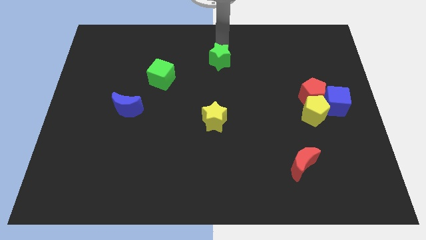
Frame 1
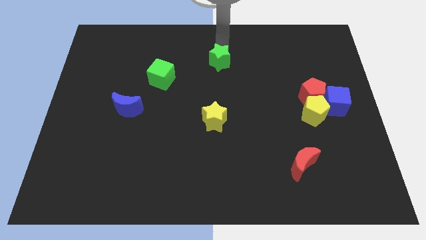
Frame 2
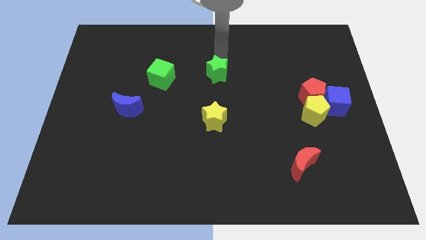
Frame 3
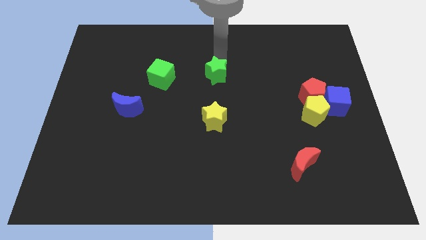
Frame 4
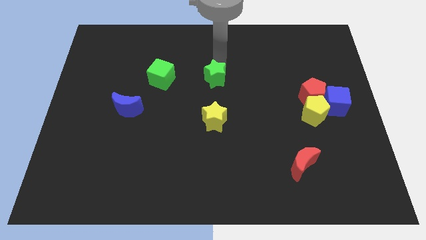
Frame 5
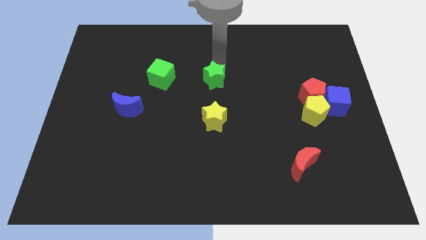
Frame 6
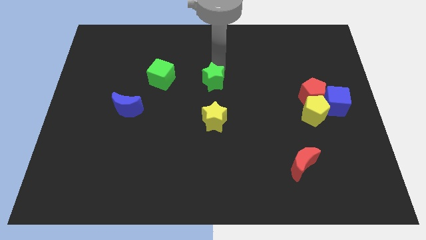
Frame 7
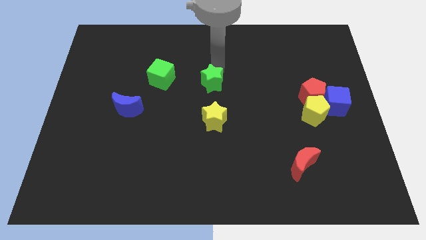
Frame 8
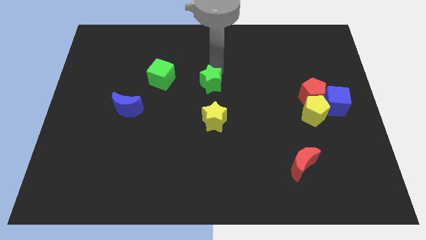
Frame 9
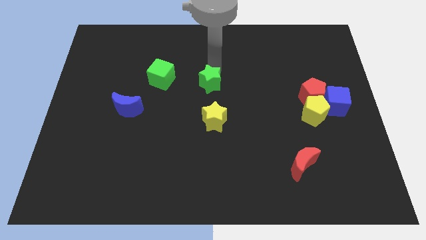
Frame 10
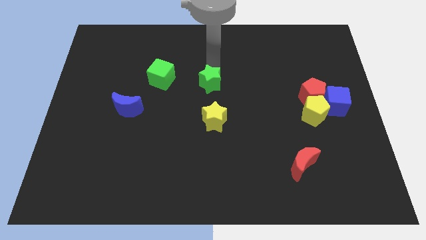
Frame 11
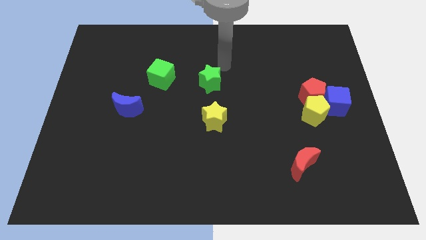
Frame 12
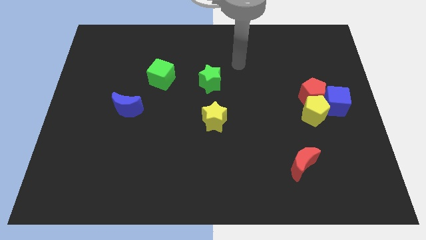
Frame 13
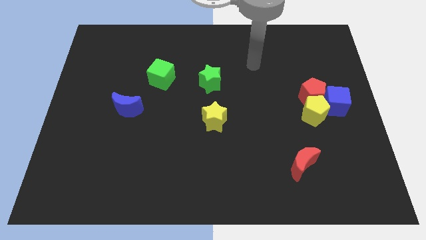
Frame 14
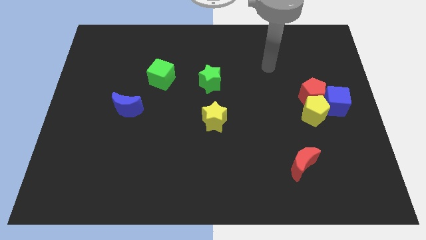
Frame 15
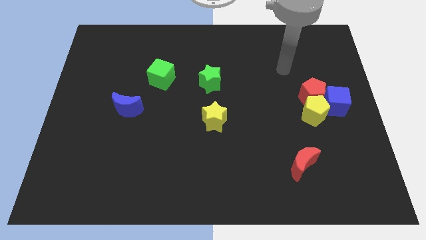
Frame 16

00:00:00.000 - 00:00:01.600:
move the green star downward

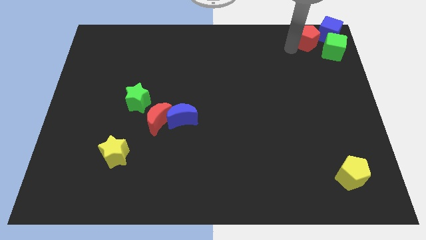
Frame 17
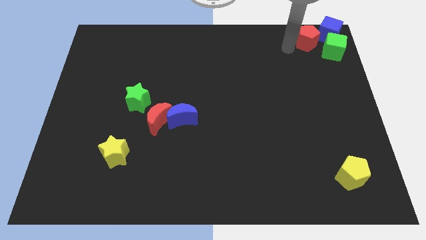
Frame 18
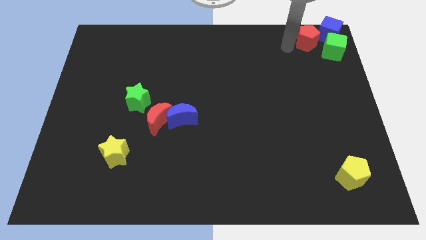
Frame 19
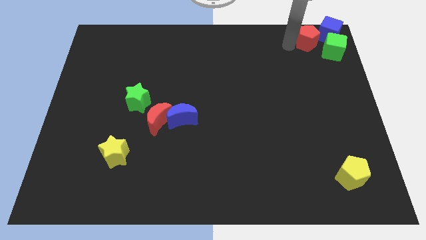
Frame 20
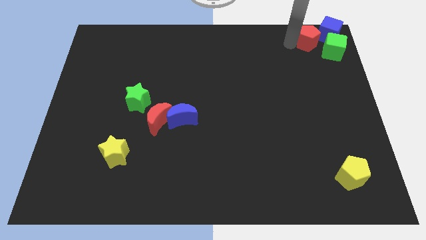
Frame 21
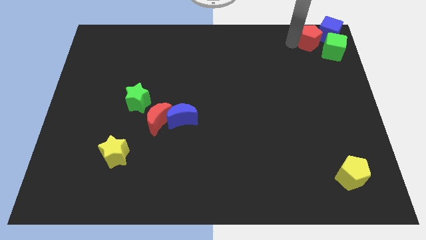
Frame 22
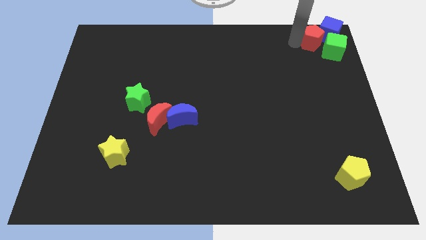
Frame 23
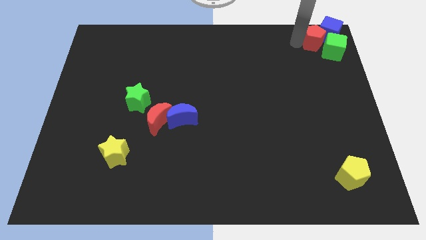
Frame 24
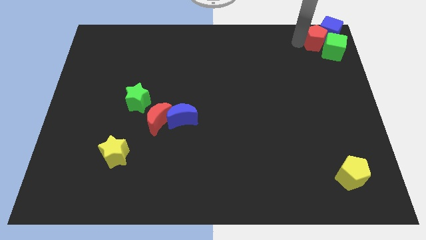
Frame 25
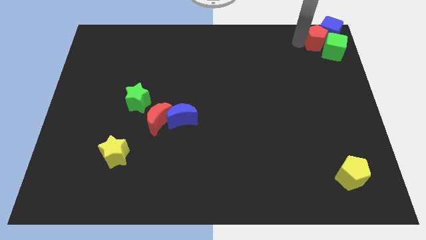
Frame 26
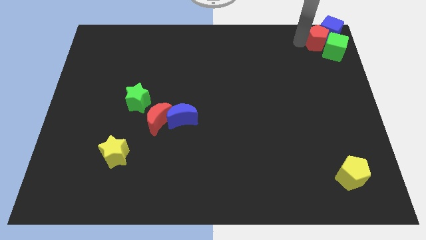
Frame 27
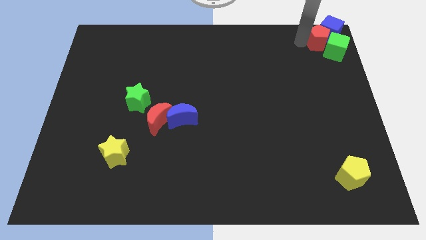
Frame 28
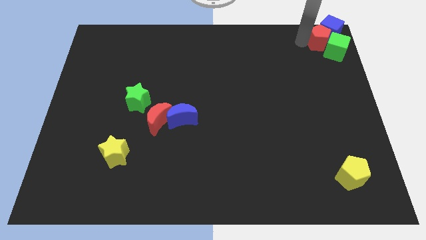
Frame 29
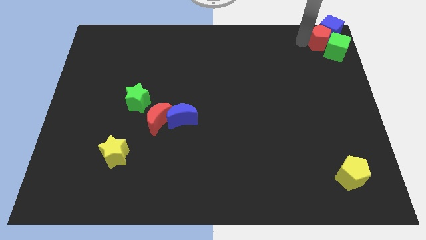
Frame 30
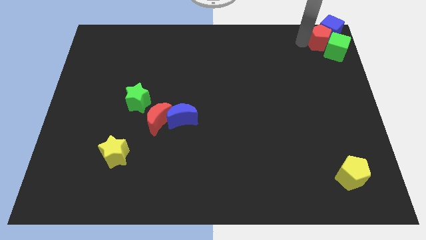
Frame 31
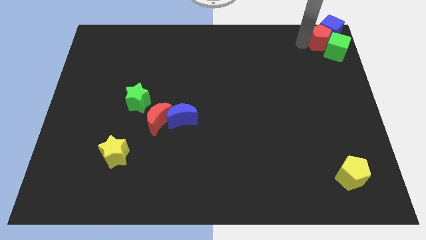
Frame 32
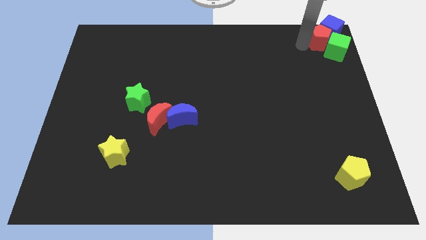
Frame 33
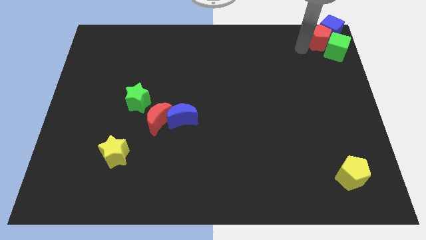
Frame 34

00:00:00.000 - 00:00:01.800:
push the red pentagon into the green cube and blue cube

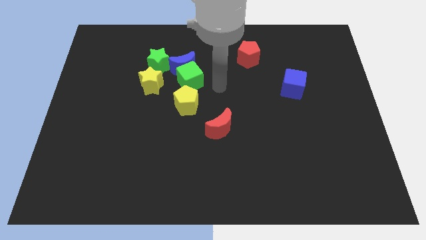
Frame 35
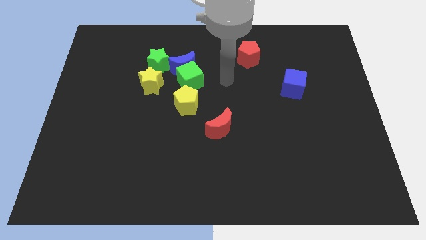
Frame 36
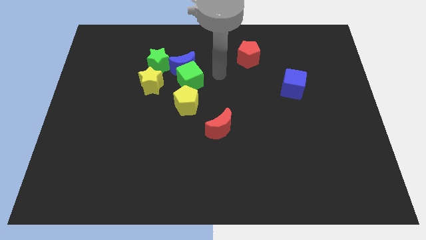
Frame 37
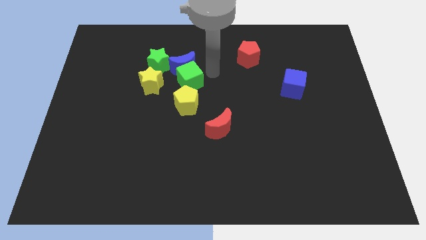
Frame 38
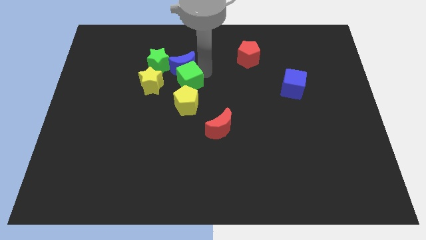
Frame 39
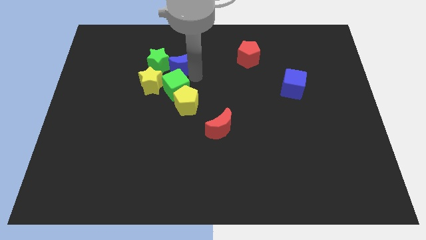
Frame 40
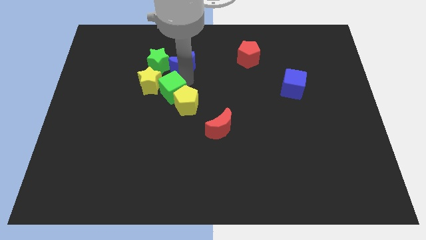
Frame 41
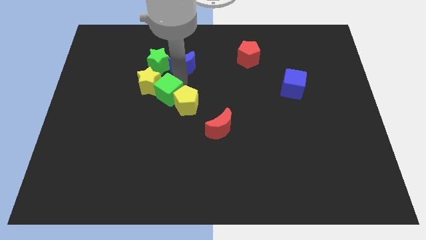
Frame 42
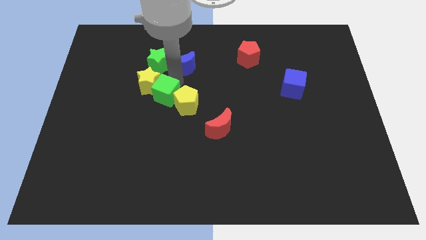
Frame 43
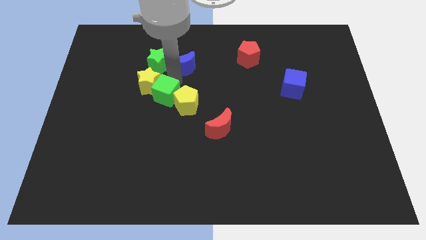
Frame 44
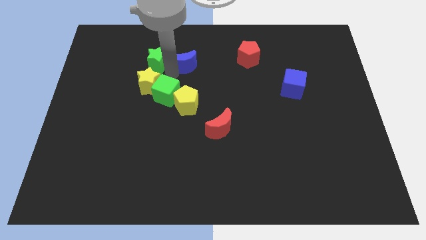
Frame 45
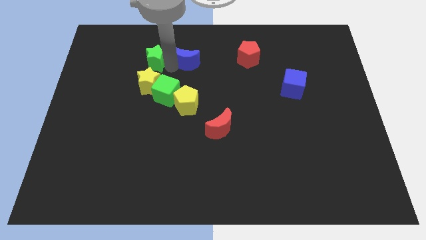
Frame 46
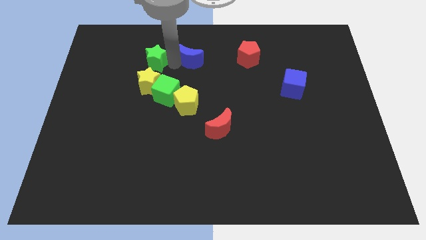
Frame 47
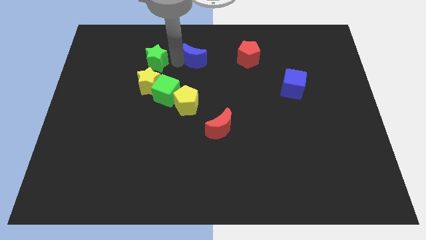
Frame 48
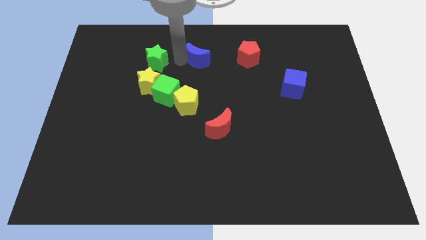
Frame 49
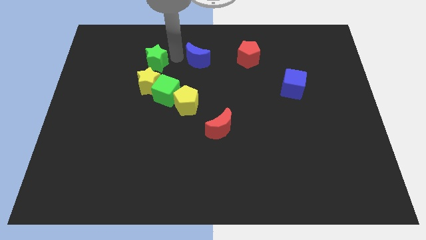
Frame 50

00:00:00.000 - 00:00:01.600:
separate green star and blue moon

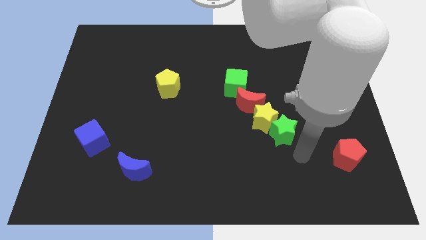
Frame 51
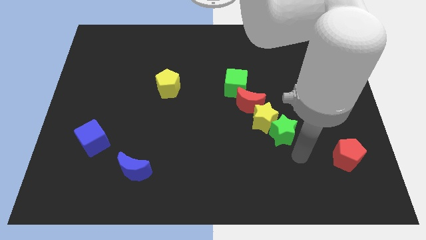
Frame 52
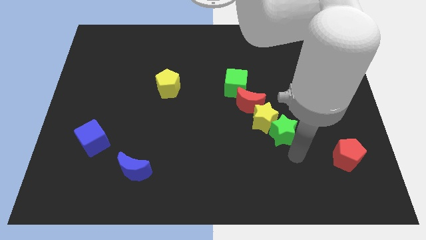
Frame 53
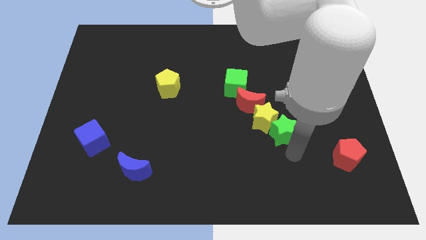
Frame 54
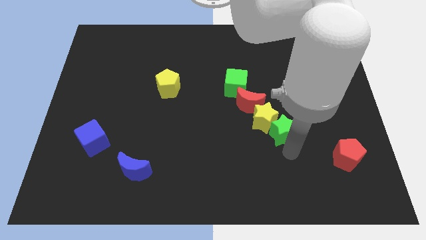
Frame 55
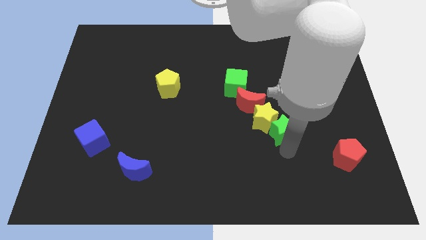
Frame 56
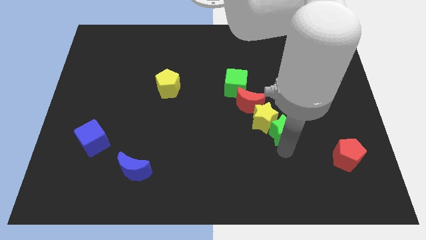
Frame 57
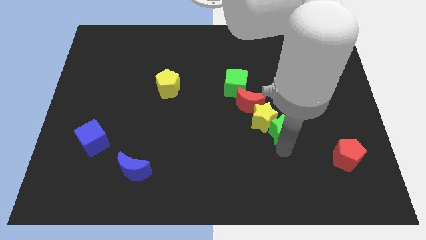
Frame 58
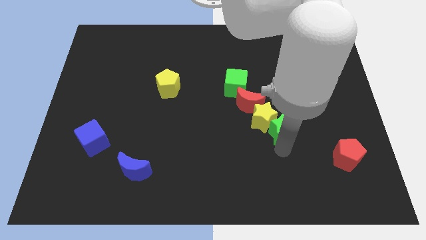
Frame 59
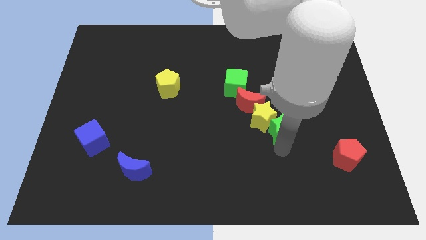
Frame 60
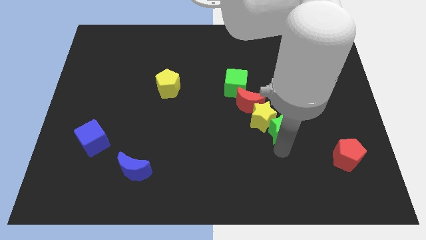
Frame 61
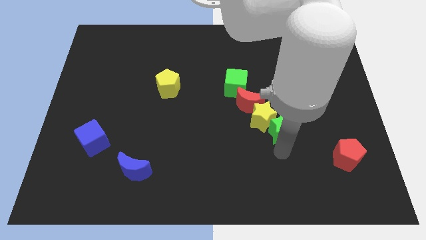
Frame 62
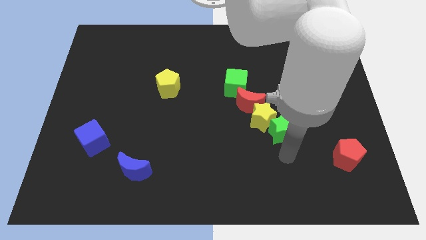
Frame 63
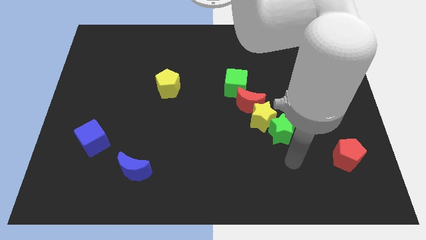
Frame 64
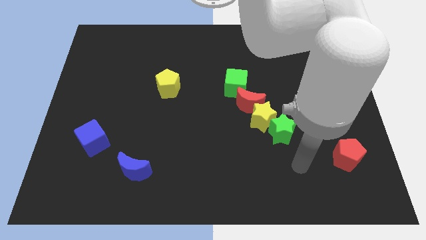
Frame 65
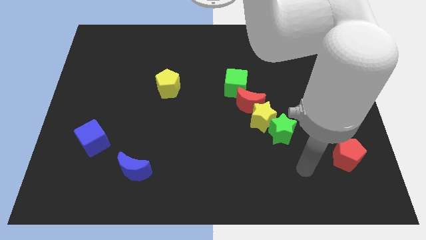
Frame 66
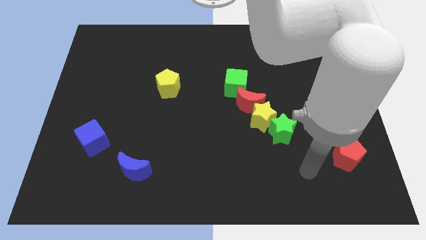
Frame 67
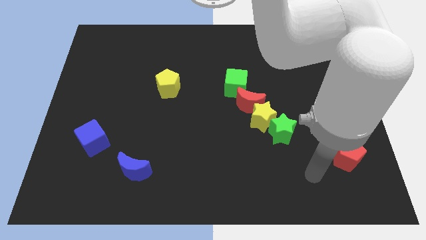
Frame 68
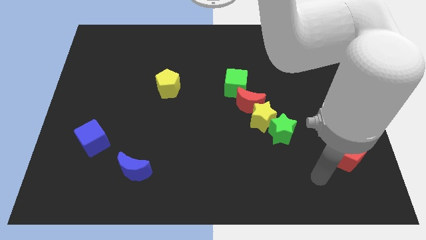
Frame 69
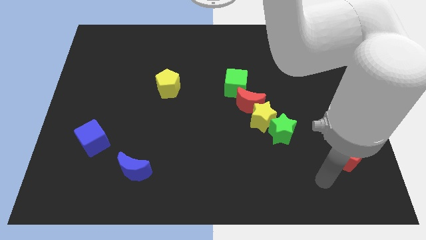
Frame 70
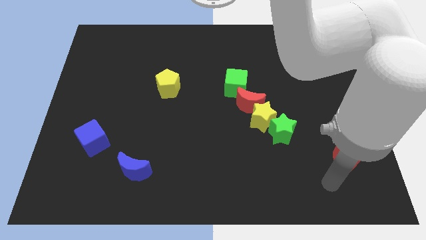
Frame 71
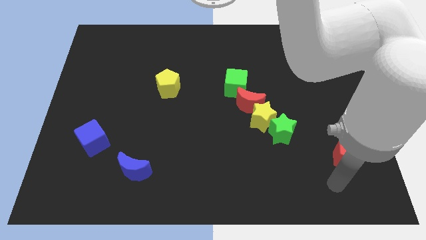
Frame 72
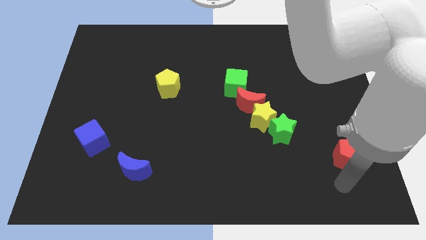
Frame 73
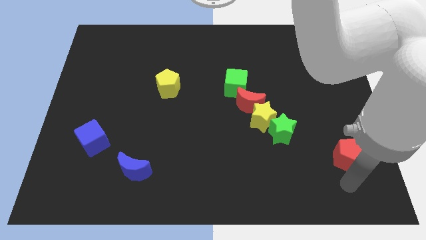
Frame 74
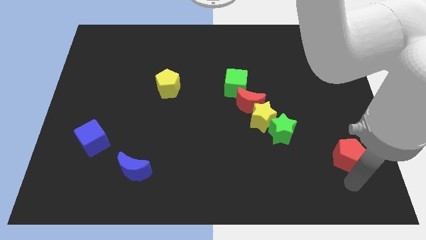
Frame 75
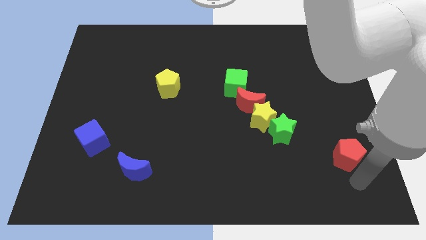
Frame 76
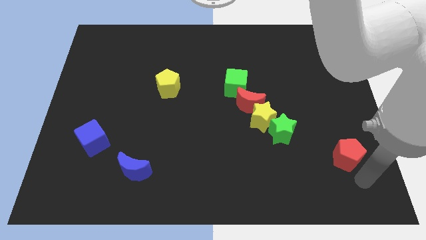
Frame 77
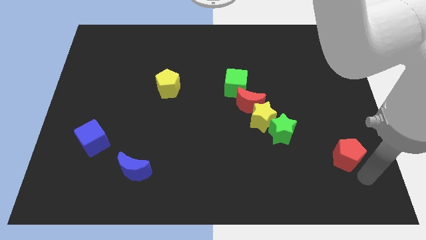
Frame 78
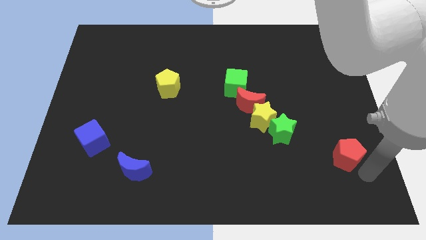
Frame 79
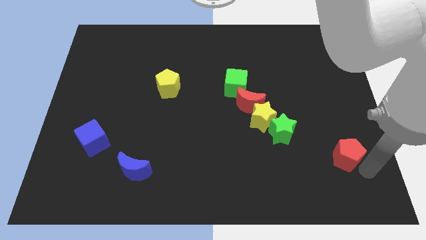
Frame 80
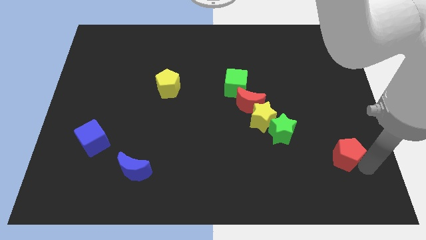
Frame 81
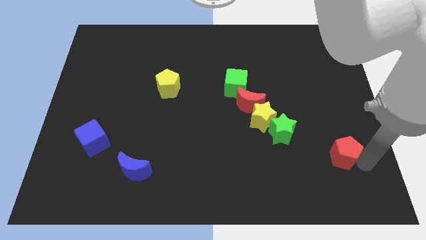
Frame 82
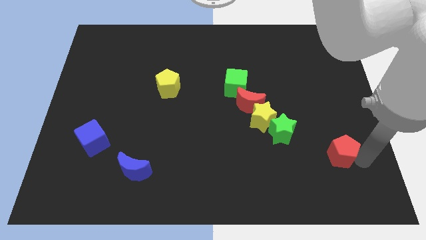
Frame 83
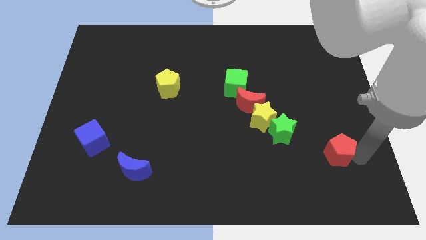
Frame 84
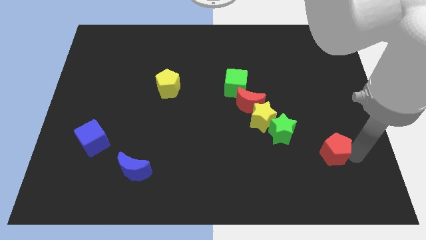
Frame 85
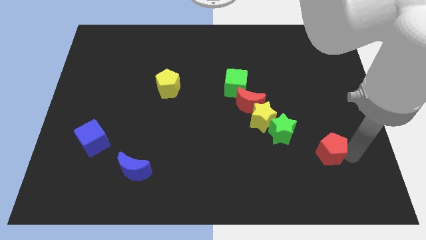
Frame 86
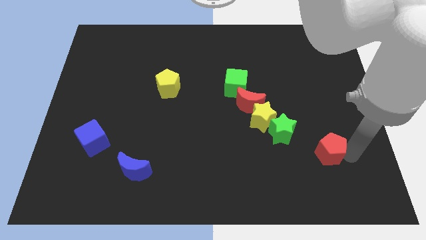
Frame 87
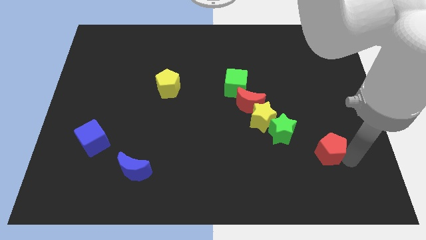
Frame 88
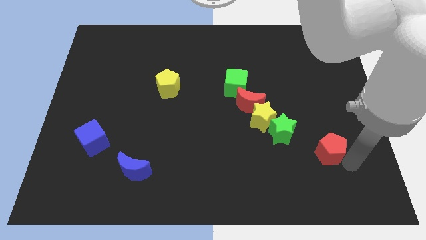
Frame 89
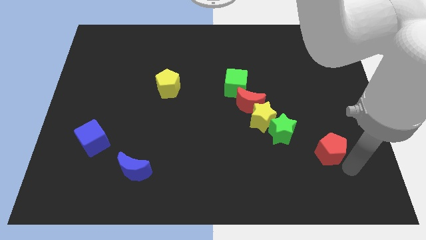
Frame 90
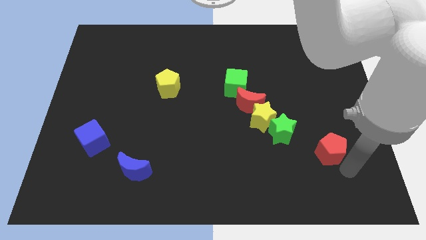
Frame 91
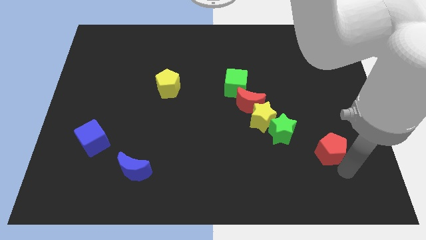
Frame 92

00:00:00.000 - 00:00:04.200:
move the red pentagon towards the green star
